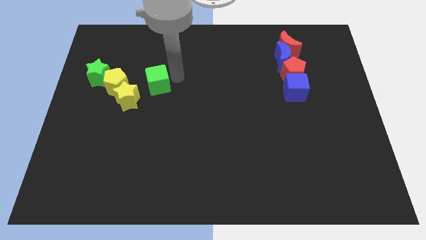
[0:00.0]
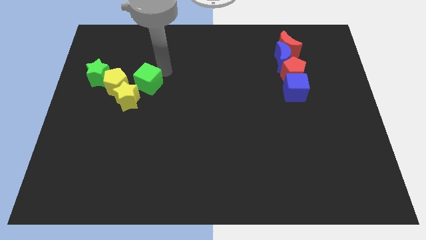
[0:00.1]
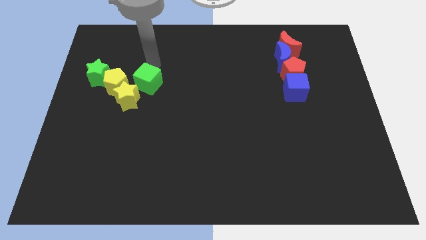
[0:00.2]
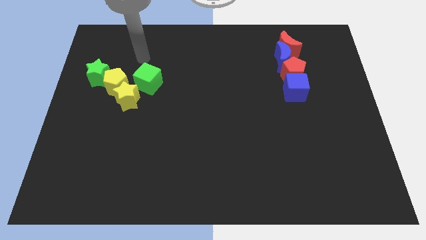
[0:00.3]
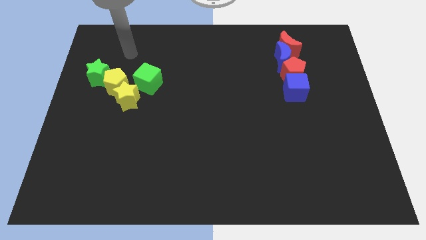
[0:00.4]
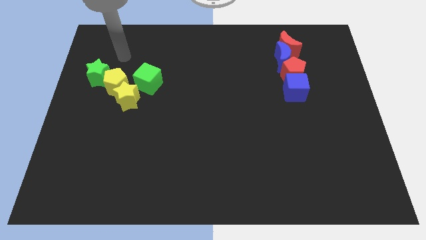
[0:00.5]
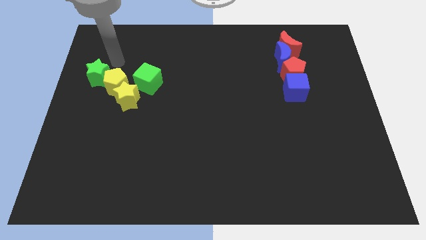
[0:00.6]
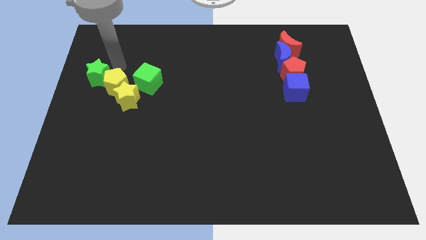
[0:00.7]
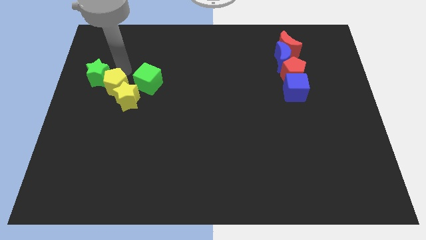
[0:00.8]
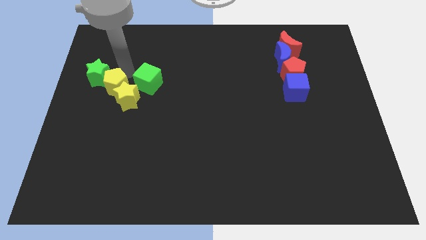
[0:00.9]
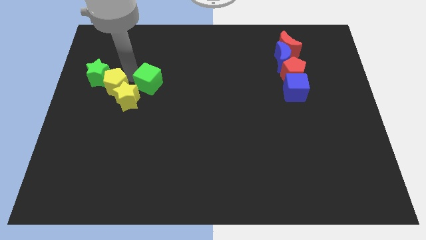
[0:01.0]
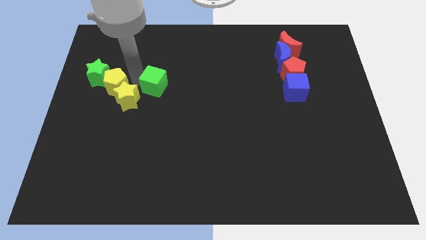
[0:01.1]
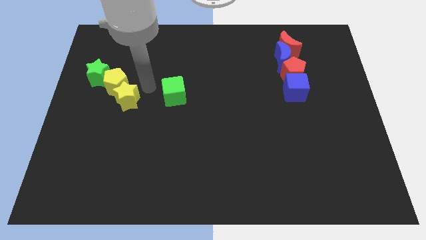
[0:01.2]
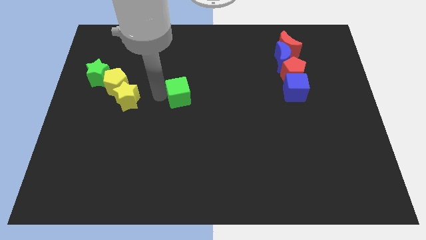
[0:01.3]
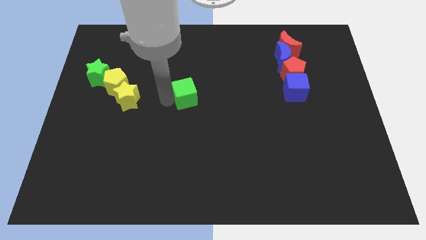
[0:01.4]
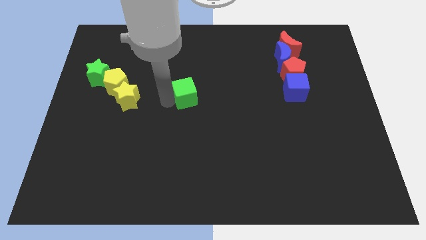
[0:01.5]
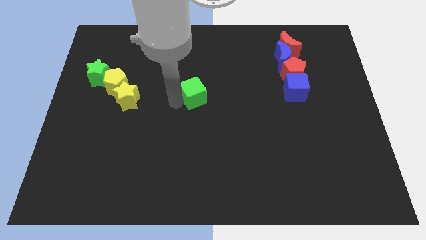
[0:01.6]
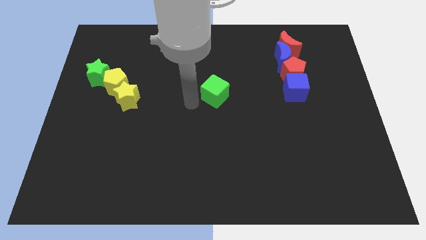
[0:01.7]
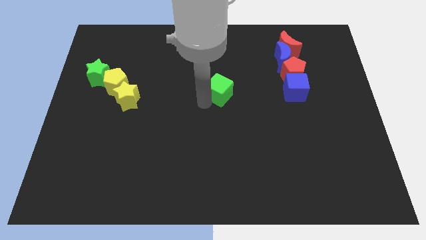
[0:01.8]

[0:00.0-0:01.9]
push the green cube to the center side of the board

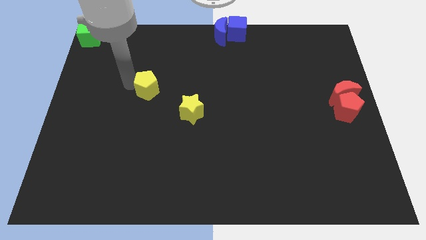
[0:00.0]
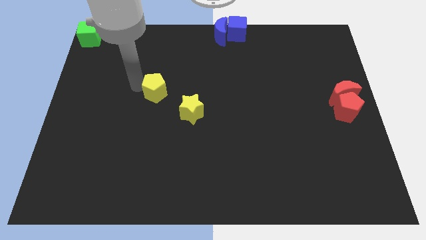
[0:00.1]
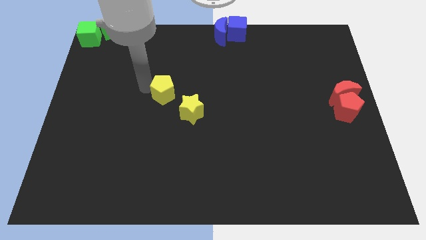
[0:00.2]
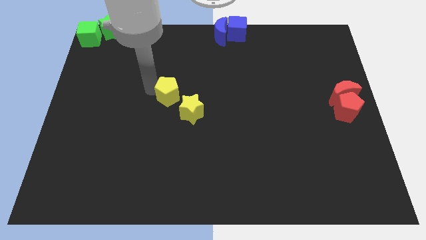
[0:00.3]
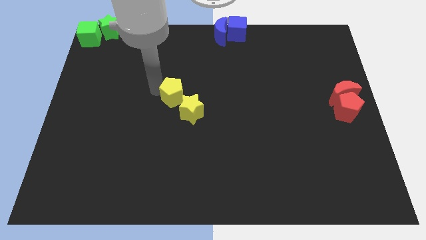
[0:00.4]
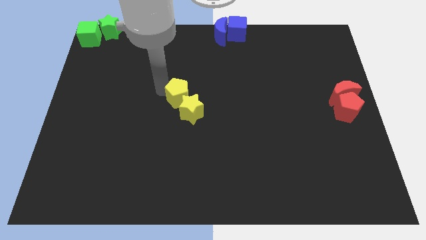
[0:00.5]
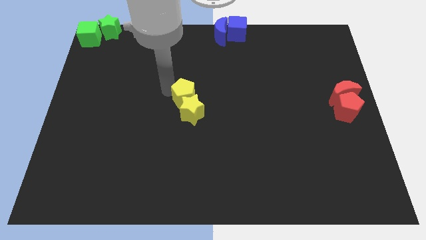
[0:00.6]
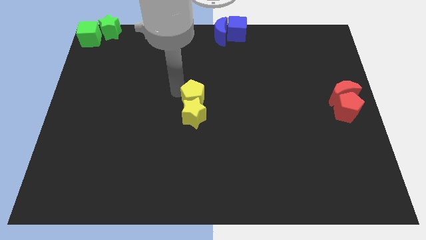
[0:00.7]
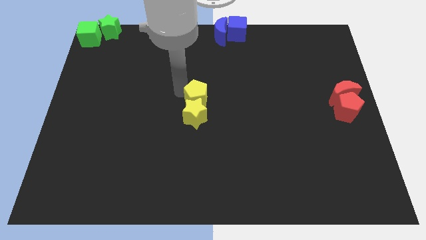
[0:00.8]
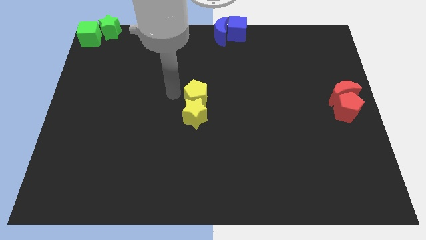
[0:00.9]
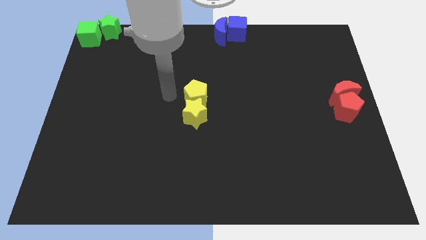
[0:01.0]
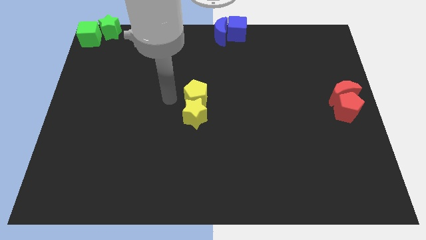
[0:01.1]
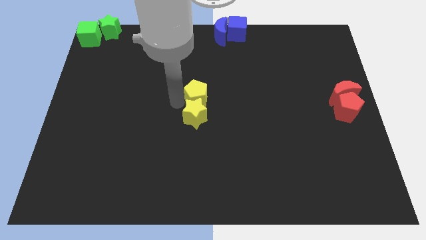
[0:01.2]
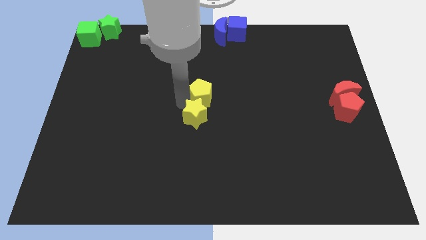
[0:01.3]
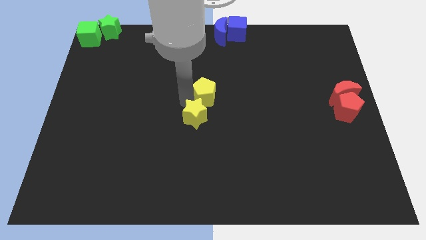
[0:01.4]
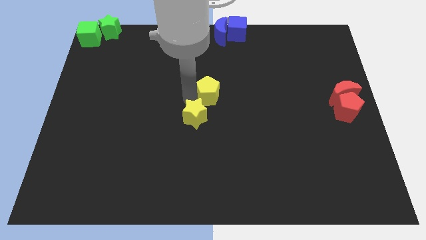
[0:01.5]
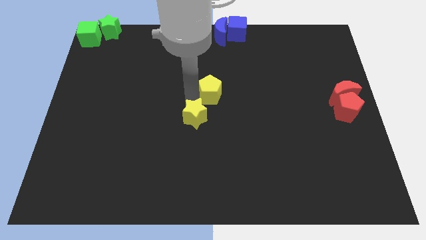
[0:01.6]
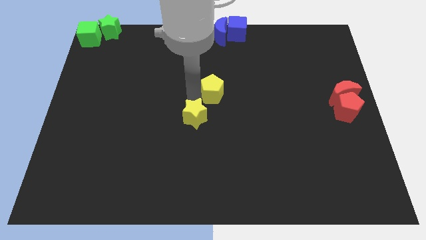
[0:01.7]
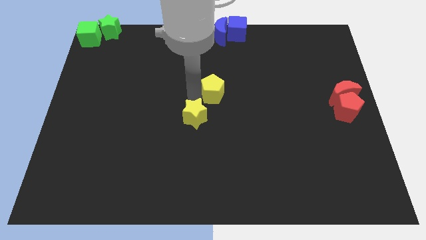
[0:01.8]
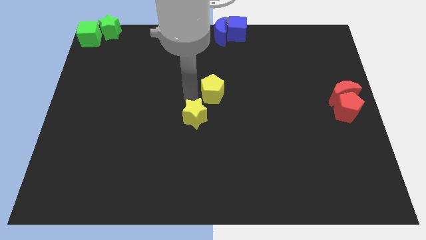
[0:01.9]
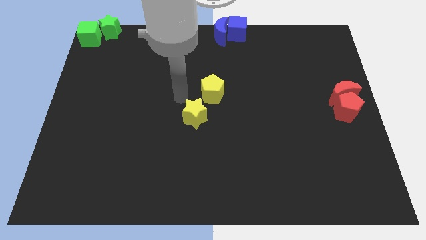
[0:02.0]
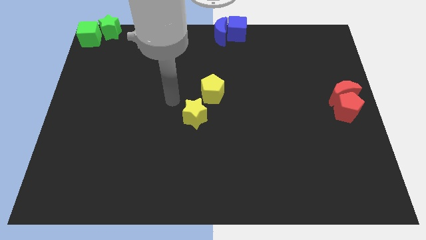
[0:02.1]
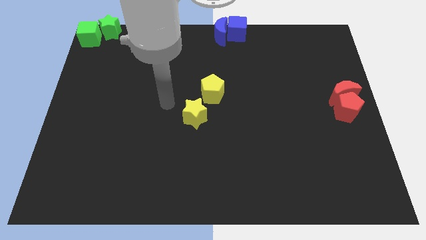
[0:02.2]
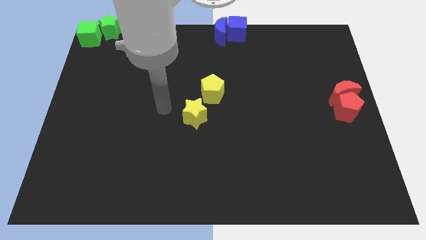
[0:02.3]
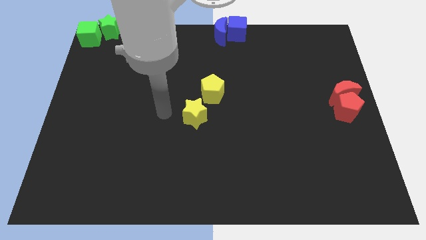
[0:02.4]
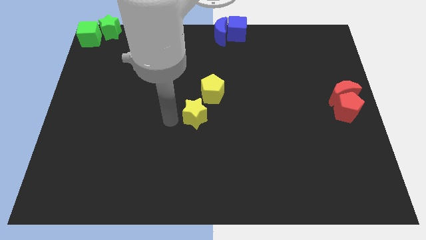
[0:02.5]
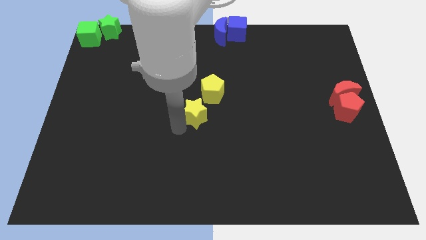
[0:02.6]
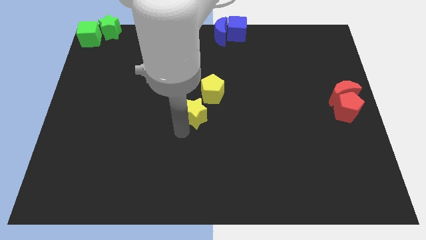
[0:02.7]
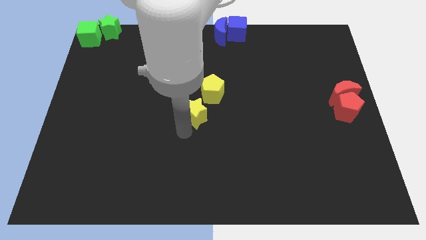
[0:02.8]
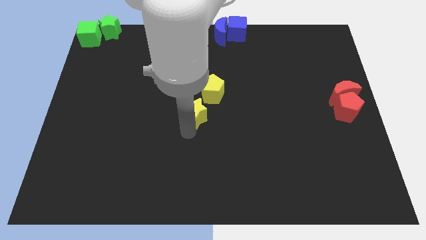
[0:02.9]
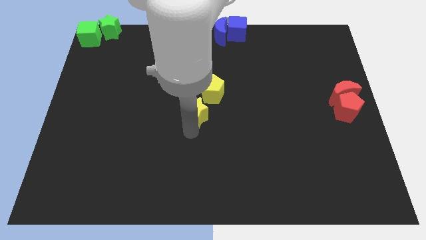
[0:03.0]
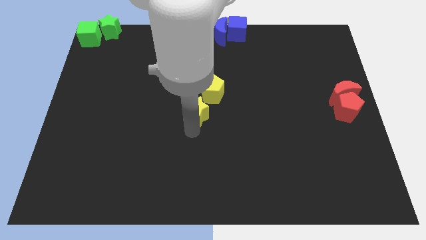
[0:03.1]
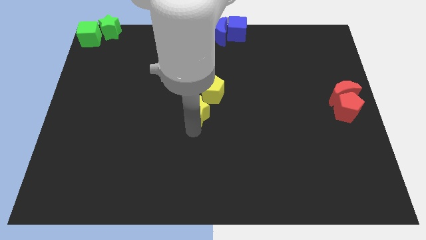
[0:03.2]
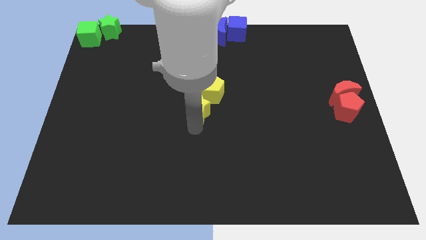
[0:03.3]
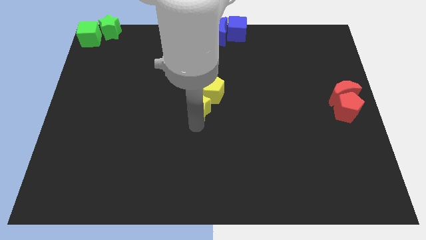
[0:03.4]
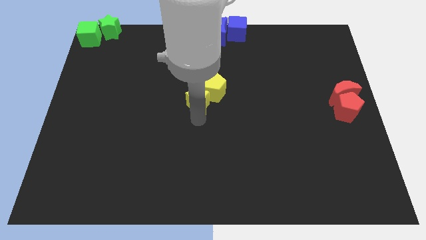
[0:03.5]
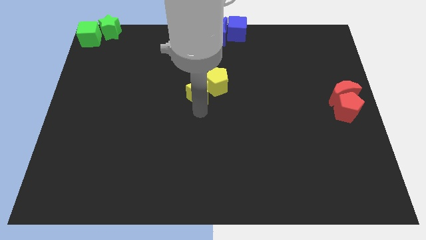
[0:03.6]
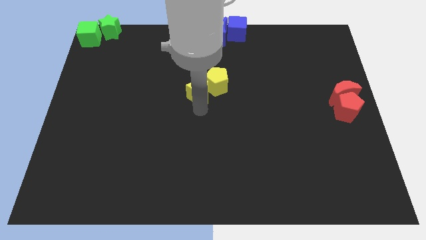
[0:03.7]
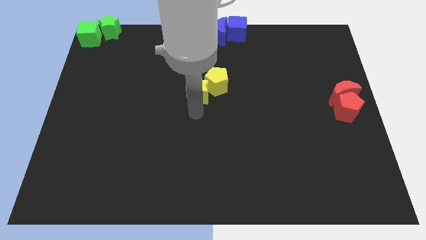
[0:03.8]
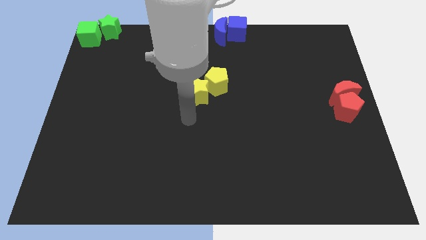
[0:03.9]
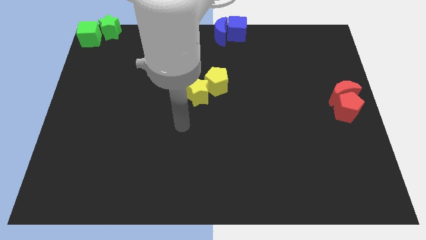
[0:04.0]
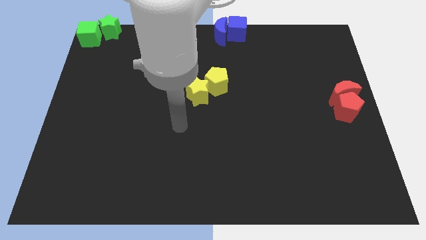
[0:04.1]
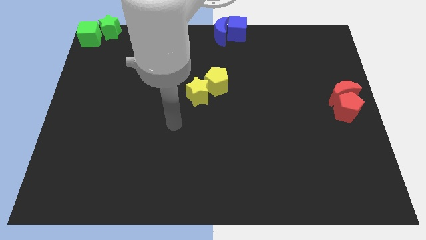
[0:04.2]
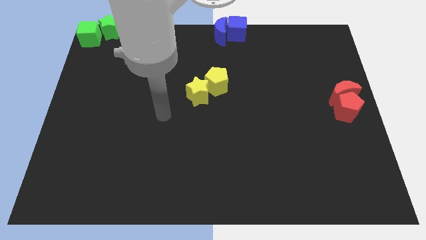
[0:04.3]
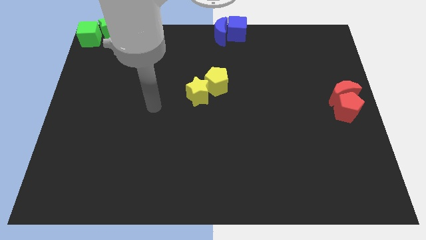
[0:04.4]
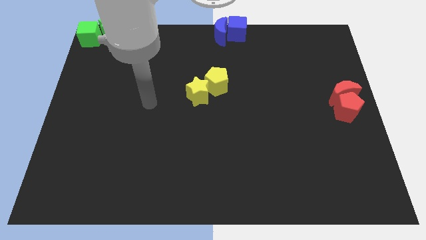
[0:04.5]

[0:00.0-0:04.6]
put the yellow star at the bottom left of the yellow pentagon

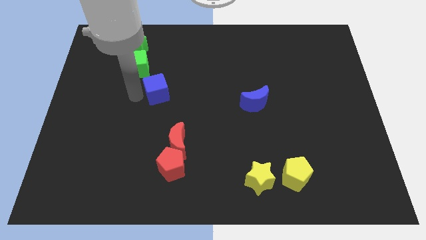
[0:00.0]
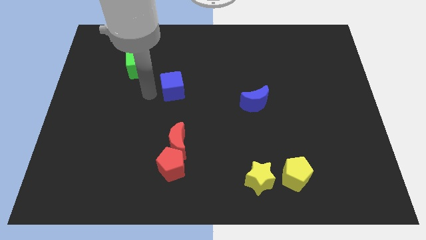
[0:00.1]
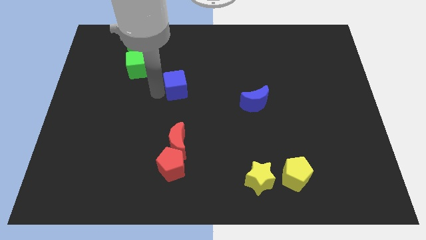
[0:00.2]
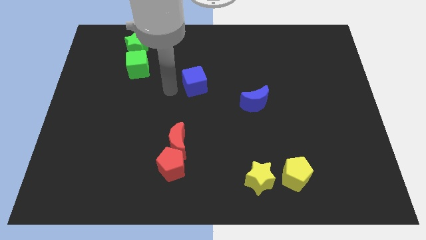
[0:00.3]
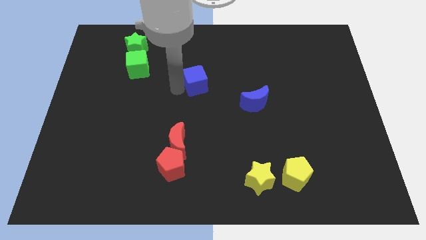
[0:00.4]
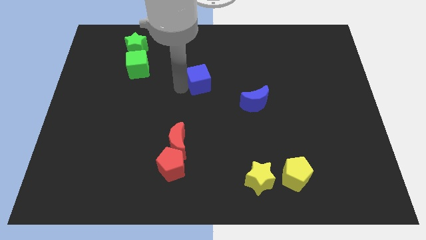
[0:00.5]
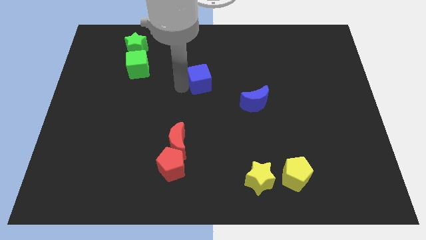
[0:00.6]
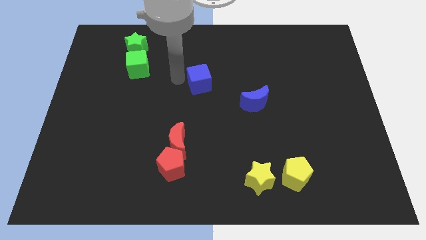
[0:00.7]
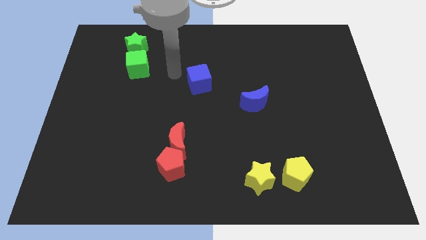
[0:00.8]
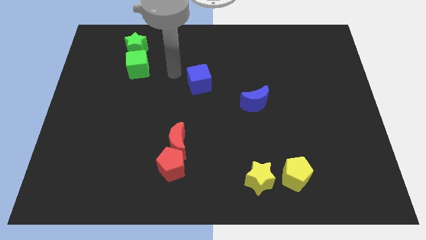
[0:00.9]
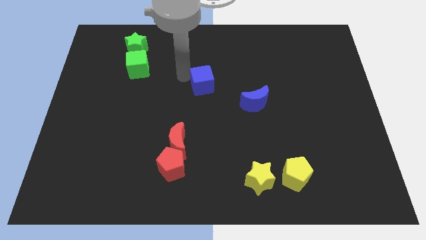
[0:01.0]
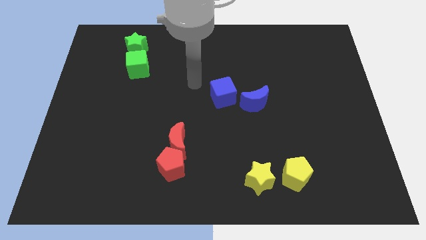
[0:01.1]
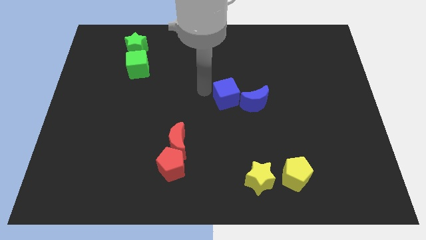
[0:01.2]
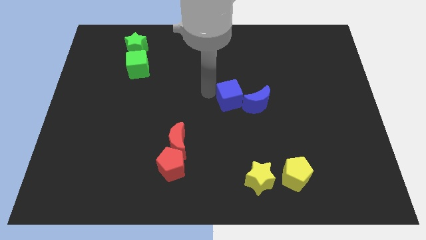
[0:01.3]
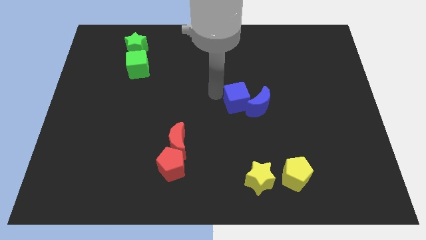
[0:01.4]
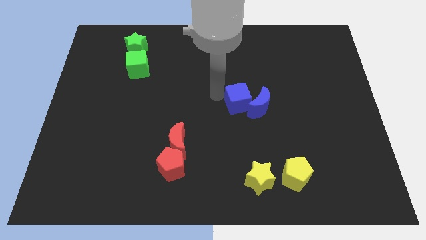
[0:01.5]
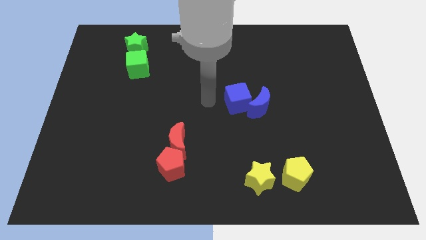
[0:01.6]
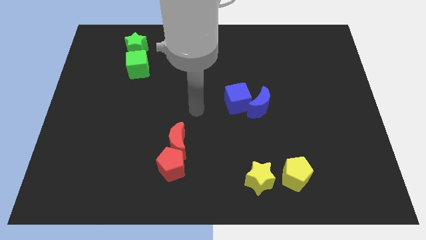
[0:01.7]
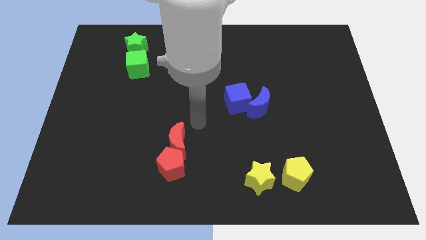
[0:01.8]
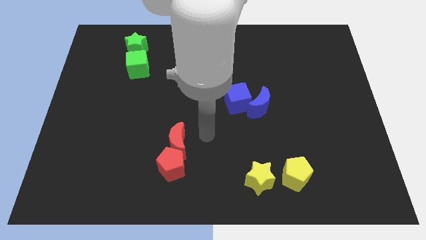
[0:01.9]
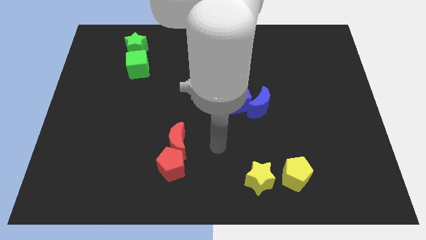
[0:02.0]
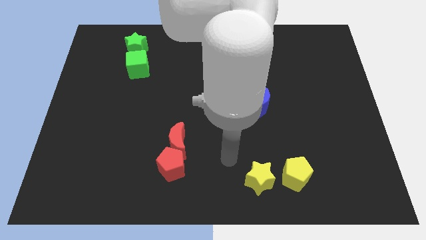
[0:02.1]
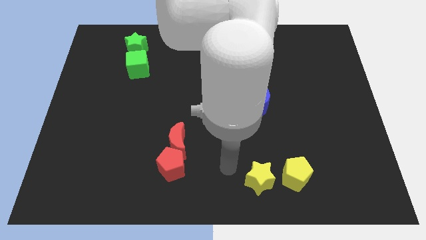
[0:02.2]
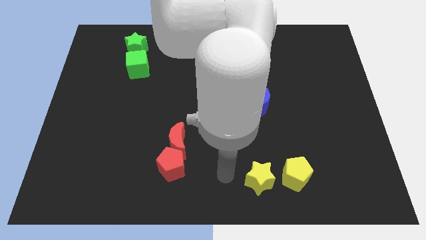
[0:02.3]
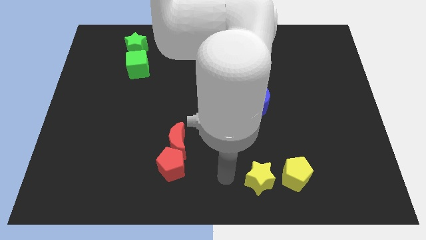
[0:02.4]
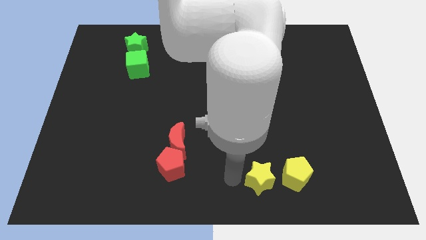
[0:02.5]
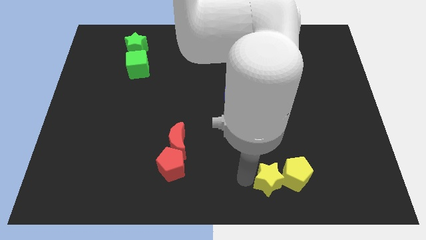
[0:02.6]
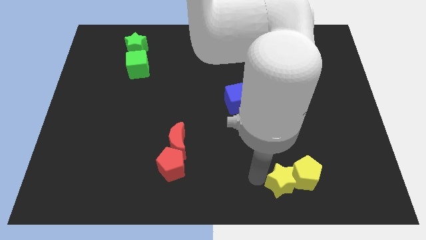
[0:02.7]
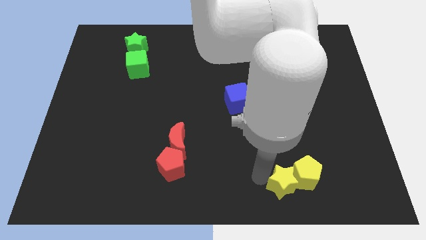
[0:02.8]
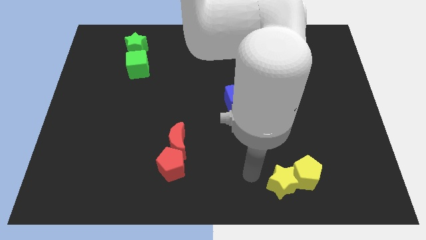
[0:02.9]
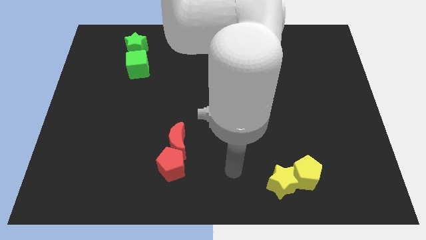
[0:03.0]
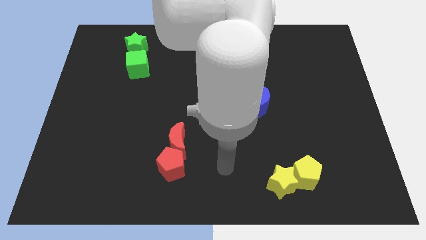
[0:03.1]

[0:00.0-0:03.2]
move yellow star into yellow pentagon
